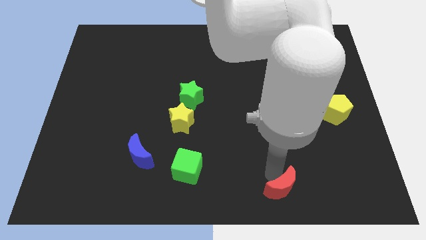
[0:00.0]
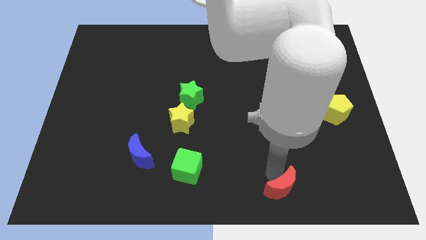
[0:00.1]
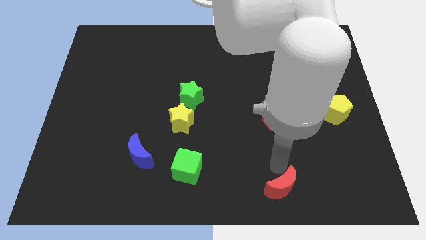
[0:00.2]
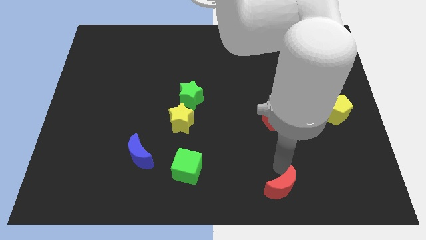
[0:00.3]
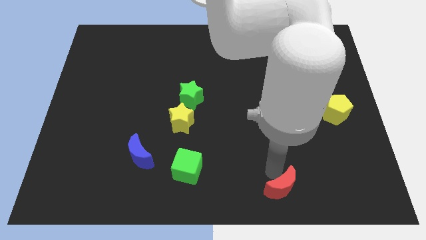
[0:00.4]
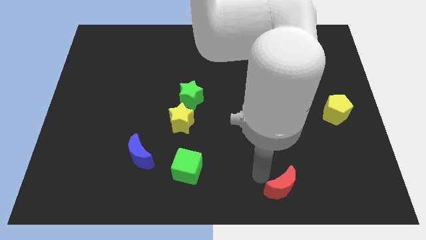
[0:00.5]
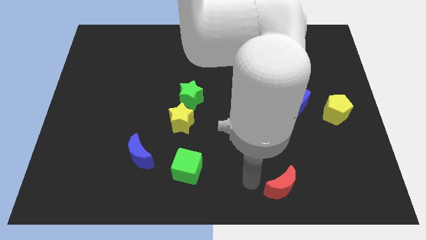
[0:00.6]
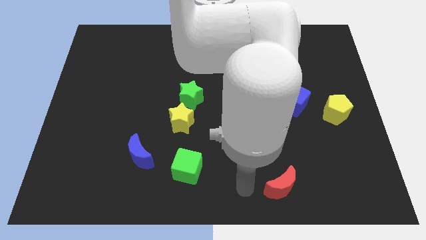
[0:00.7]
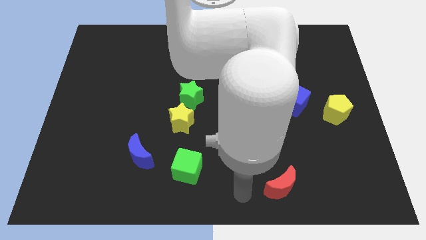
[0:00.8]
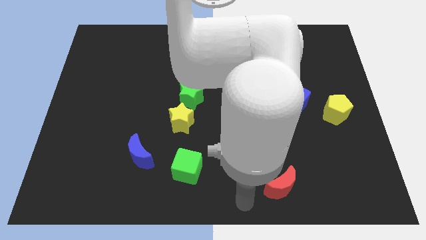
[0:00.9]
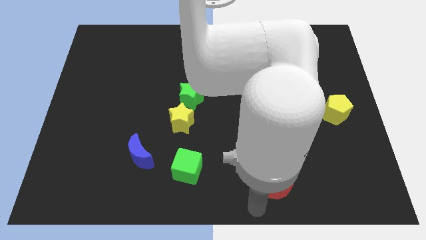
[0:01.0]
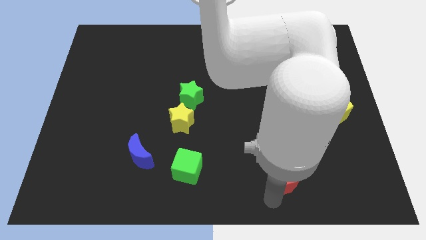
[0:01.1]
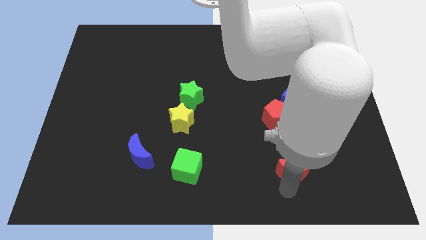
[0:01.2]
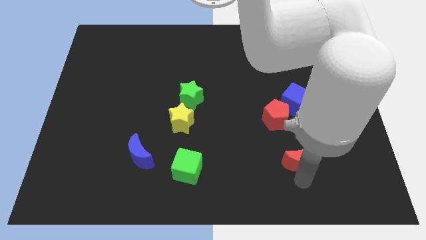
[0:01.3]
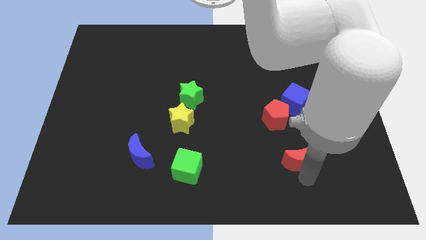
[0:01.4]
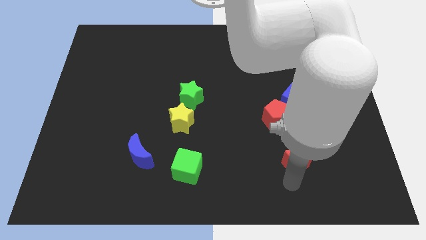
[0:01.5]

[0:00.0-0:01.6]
push the red crescent to the bottom of the blue cube

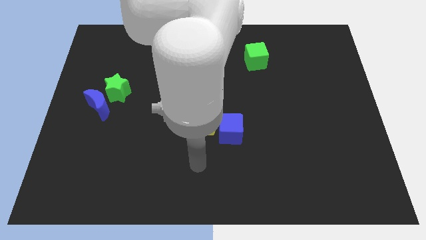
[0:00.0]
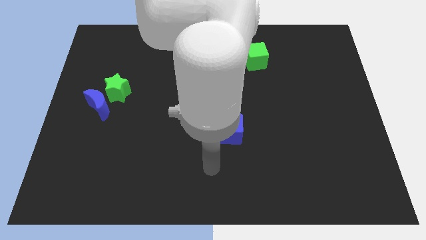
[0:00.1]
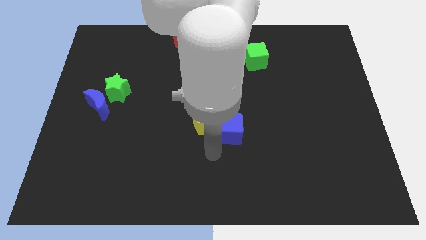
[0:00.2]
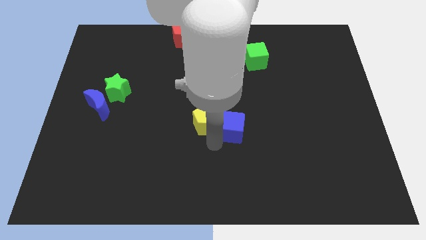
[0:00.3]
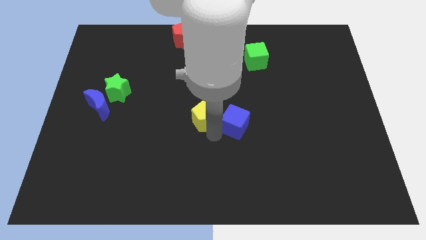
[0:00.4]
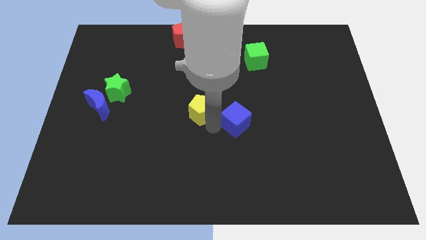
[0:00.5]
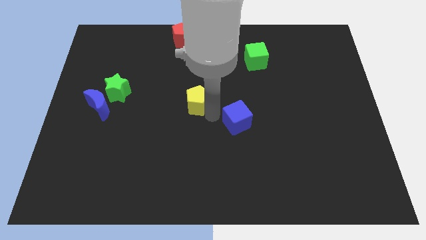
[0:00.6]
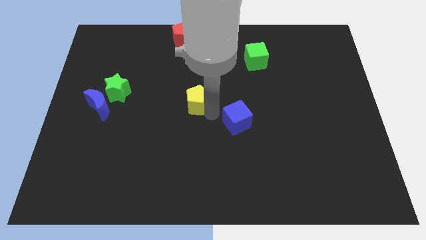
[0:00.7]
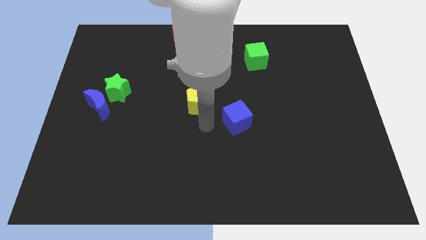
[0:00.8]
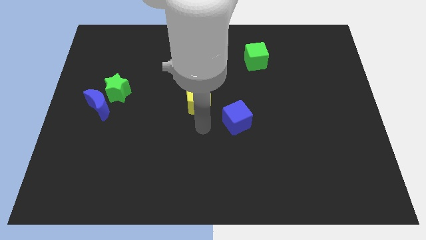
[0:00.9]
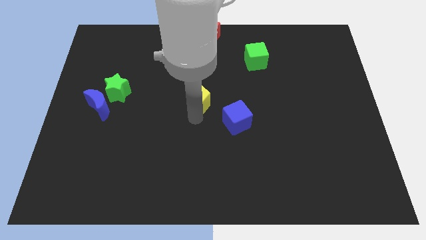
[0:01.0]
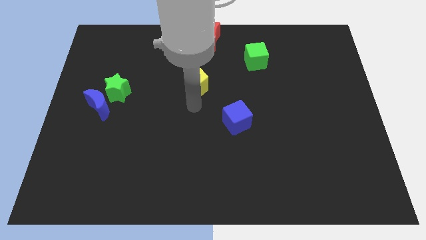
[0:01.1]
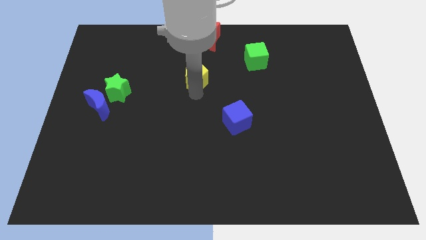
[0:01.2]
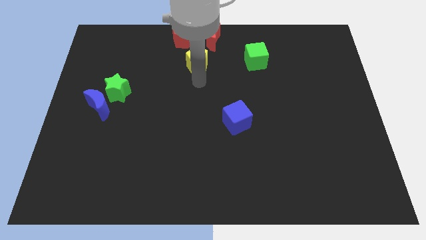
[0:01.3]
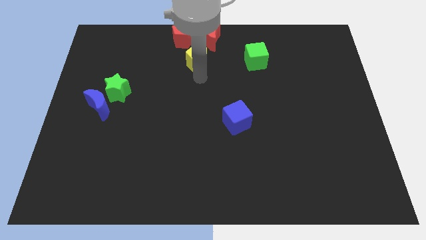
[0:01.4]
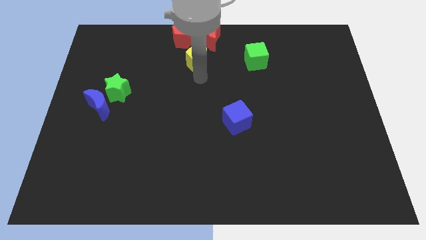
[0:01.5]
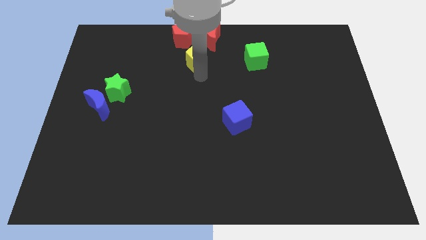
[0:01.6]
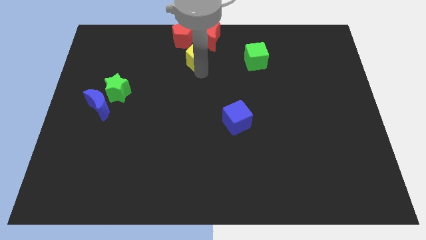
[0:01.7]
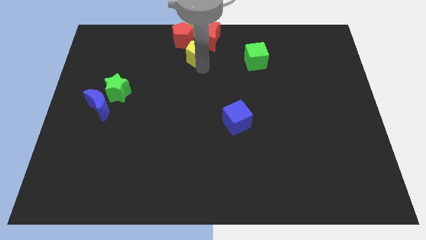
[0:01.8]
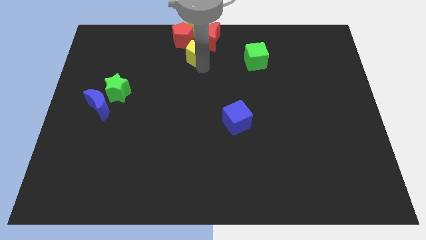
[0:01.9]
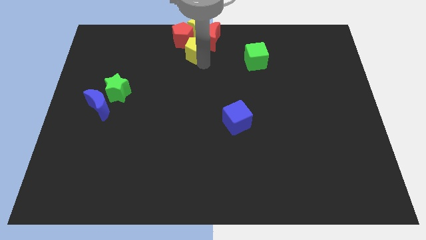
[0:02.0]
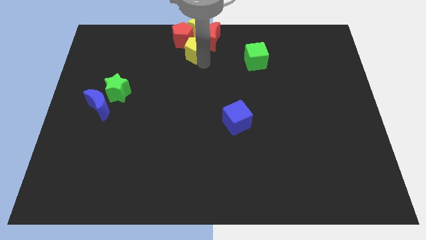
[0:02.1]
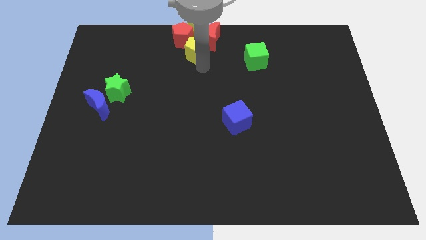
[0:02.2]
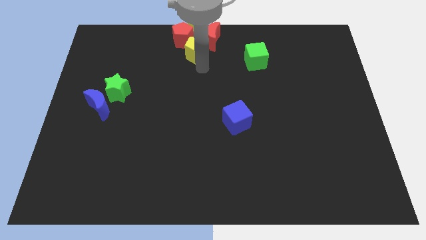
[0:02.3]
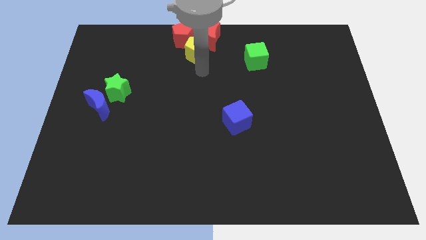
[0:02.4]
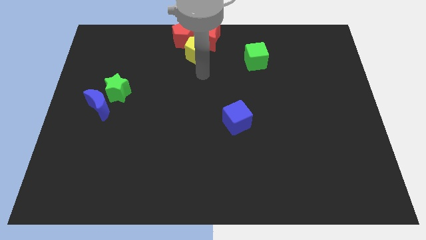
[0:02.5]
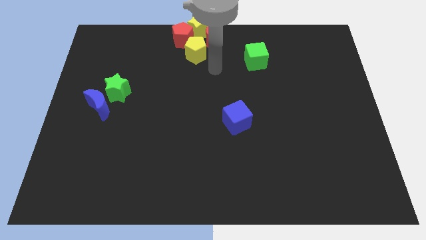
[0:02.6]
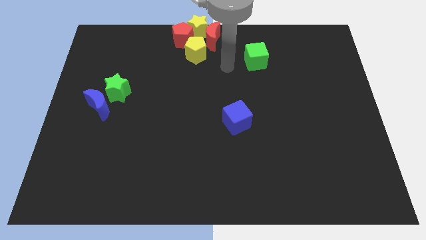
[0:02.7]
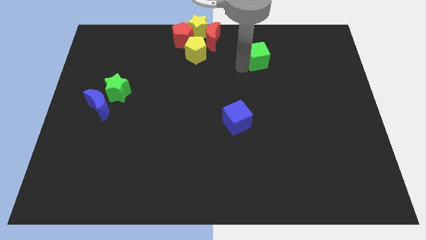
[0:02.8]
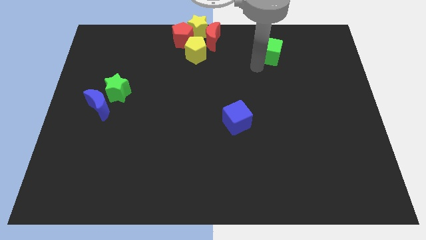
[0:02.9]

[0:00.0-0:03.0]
move the yellow pentagon towards the top center

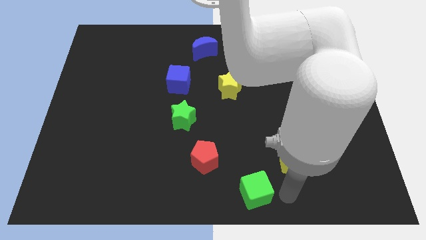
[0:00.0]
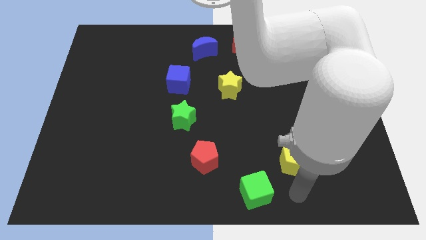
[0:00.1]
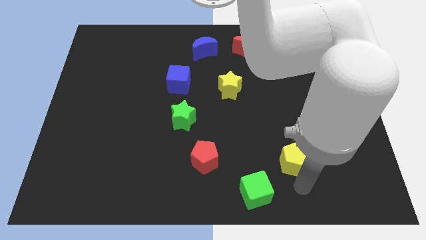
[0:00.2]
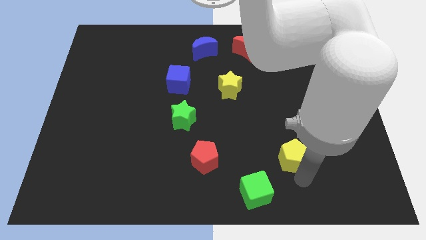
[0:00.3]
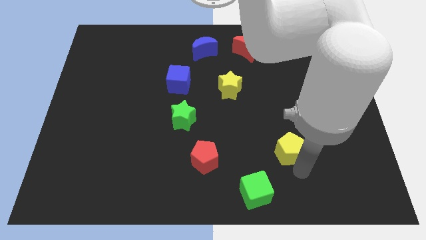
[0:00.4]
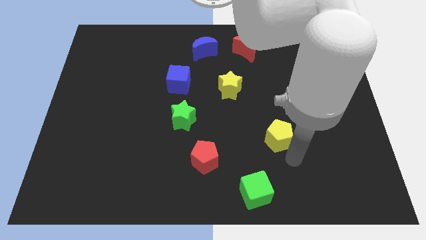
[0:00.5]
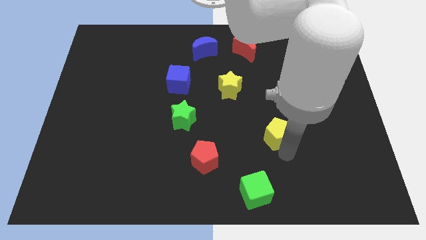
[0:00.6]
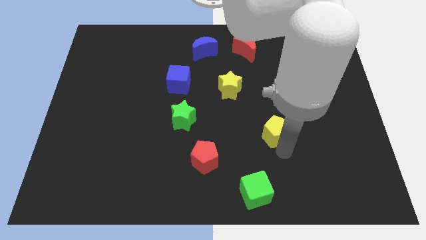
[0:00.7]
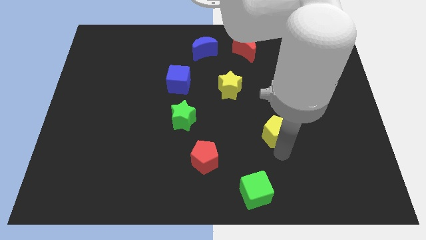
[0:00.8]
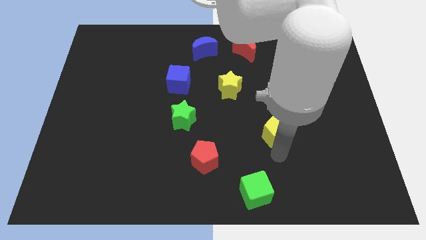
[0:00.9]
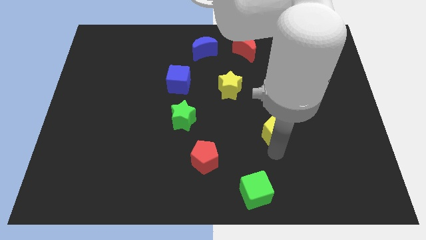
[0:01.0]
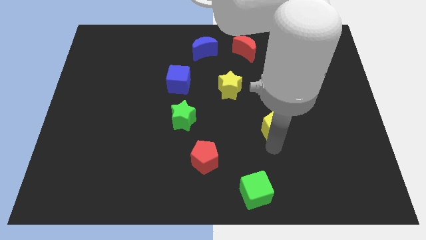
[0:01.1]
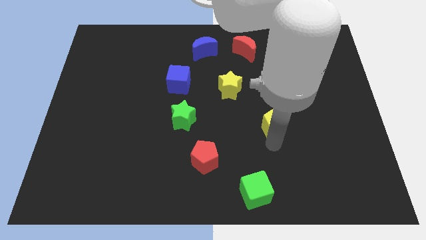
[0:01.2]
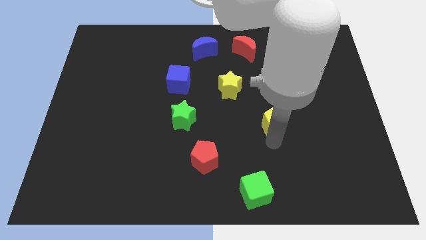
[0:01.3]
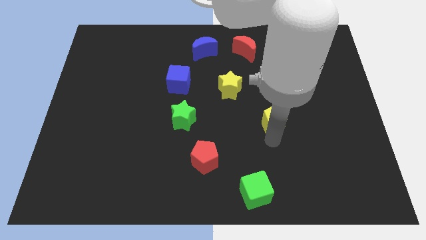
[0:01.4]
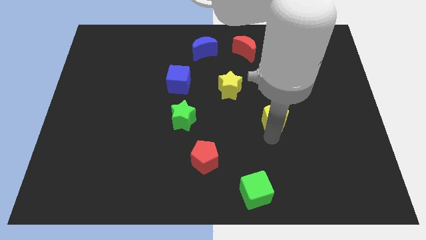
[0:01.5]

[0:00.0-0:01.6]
push the yellow pentagon towards the center of the board

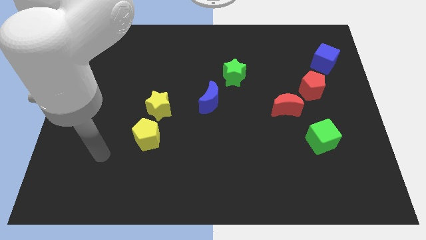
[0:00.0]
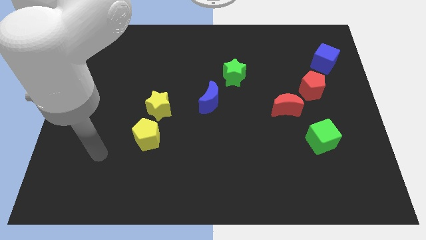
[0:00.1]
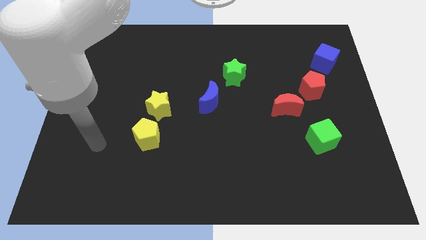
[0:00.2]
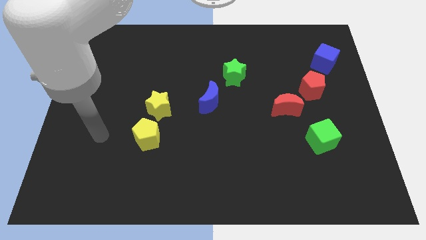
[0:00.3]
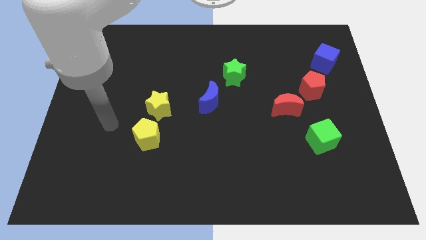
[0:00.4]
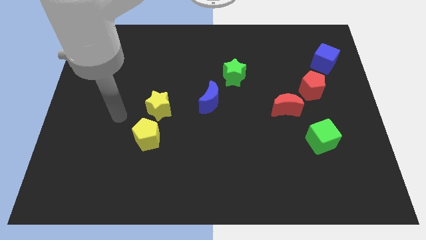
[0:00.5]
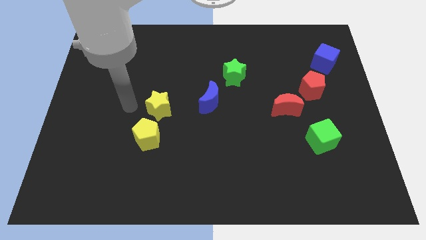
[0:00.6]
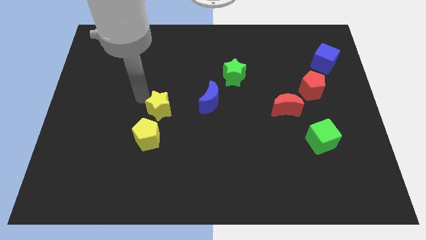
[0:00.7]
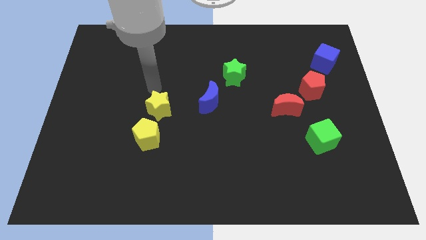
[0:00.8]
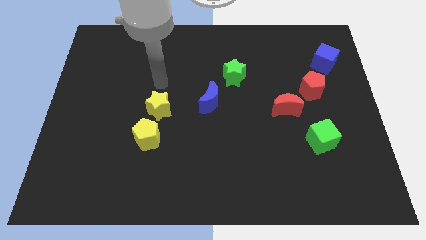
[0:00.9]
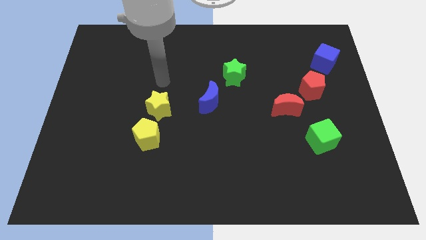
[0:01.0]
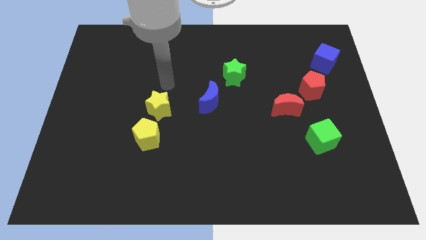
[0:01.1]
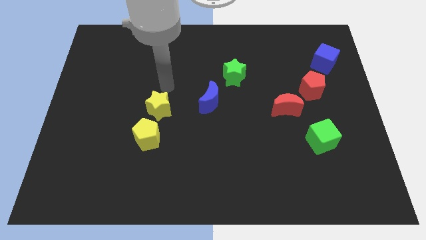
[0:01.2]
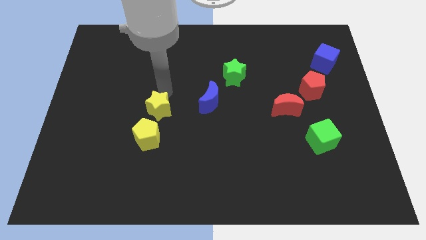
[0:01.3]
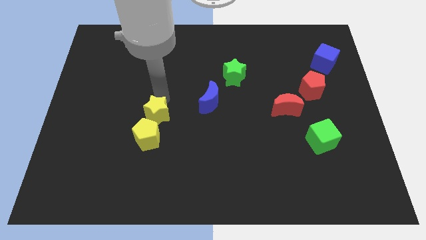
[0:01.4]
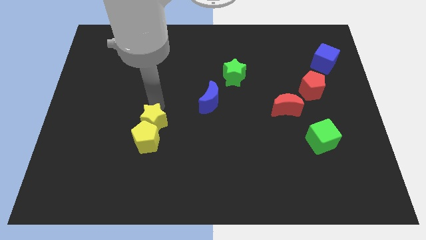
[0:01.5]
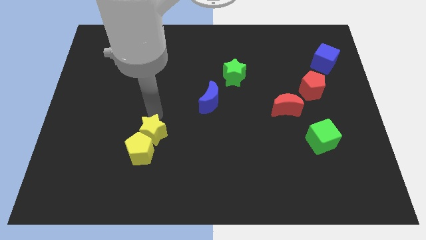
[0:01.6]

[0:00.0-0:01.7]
move the yellow star above the yellow pentagon

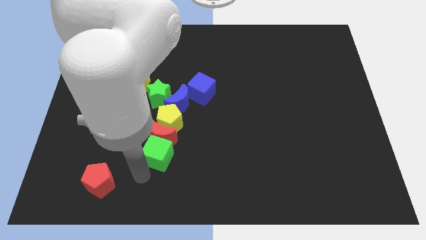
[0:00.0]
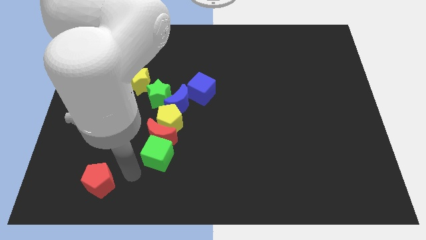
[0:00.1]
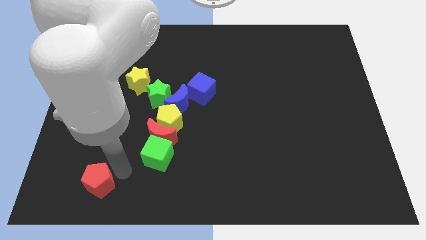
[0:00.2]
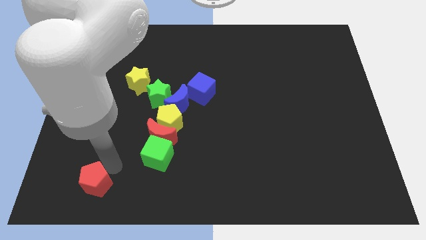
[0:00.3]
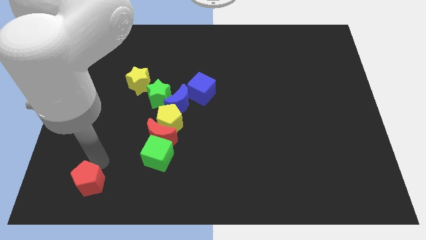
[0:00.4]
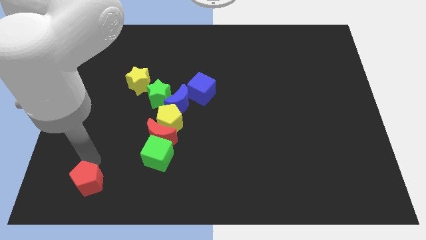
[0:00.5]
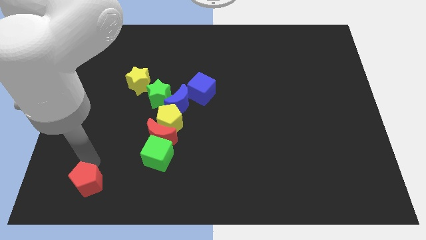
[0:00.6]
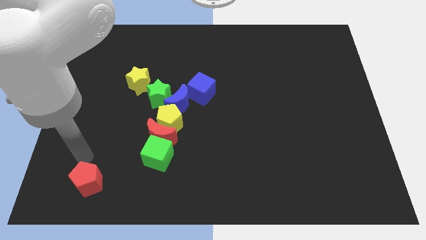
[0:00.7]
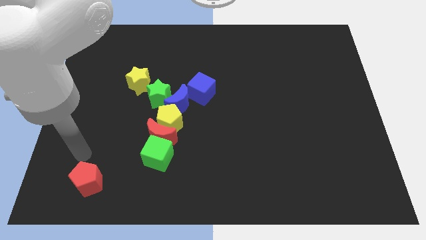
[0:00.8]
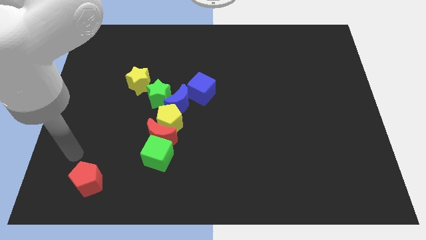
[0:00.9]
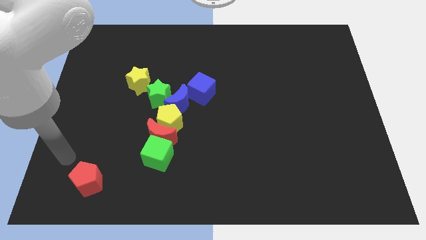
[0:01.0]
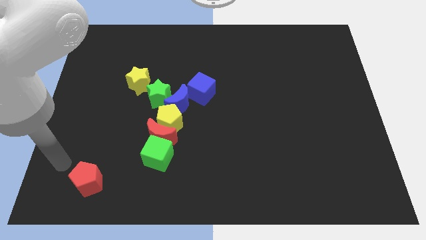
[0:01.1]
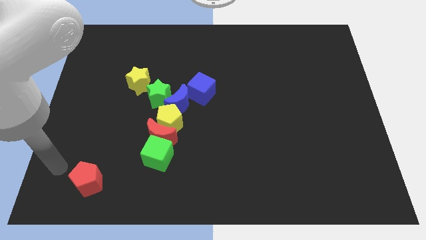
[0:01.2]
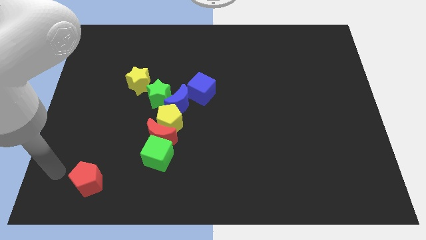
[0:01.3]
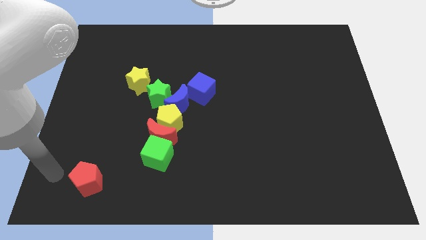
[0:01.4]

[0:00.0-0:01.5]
point your arm left to red pentagon
